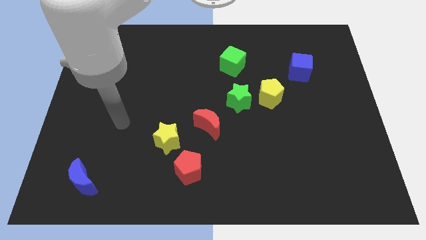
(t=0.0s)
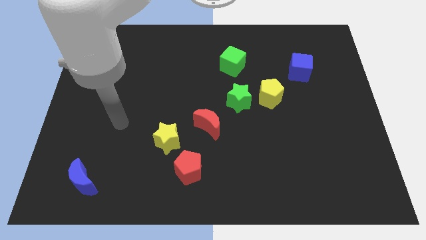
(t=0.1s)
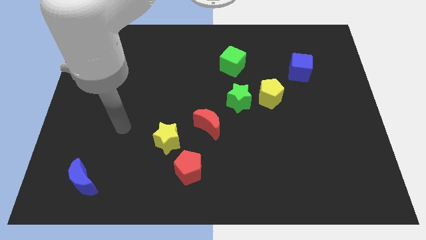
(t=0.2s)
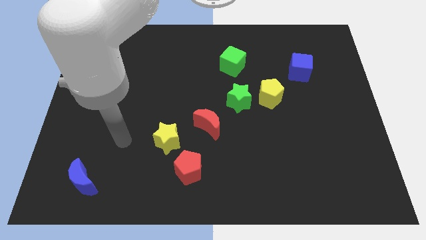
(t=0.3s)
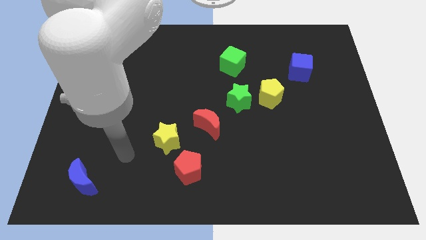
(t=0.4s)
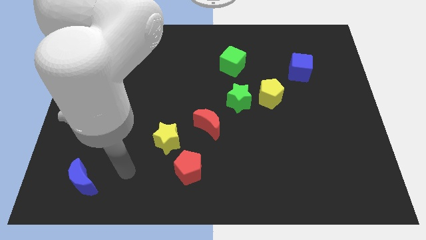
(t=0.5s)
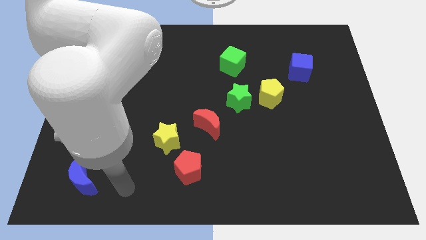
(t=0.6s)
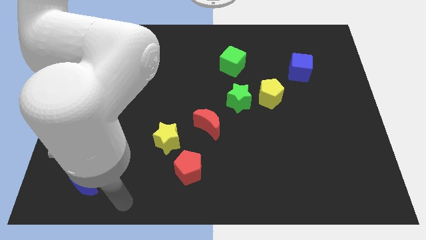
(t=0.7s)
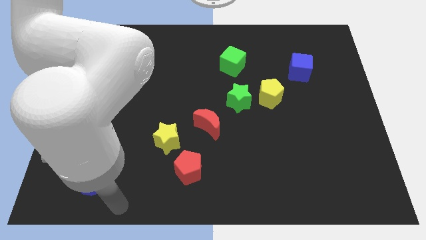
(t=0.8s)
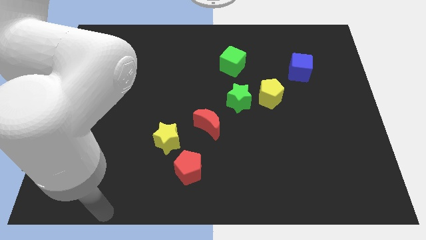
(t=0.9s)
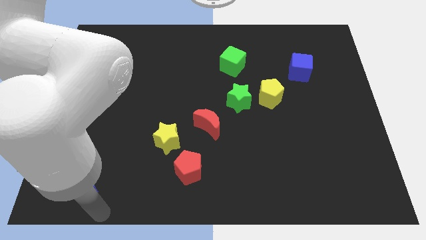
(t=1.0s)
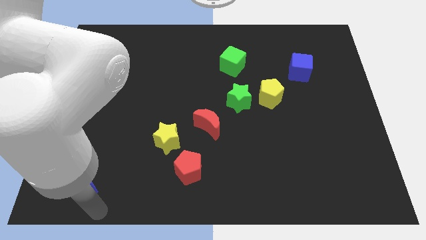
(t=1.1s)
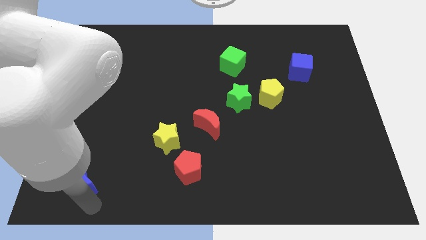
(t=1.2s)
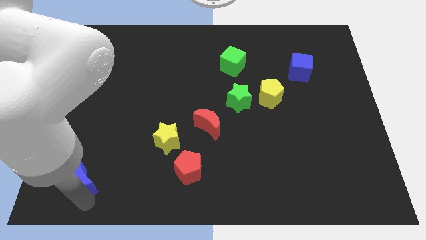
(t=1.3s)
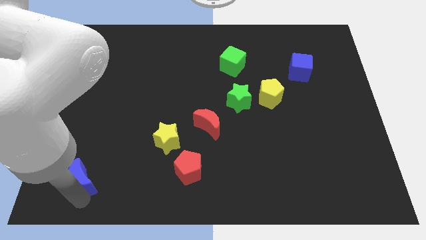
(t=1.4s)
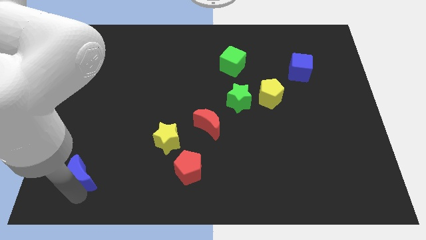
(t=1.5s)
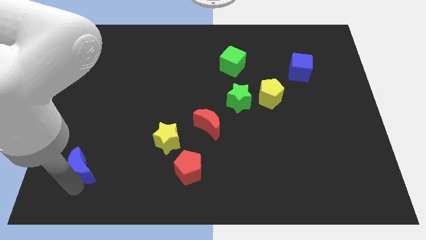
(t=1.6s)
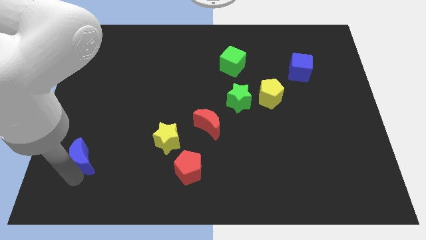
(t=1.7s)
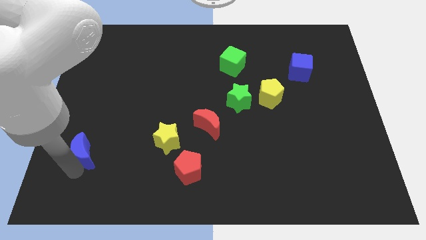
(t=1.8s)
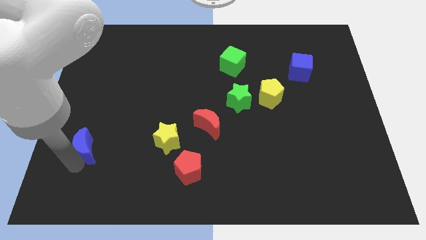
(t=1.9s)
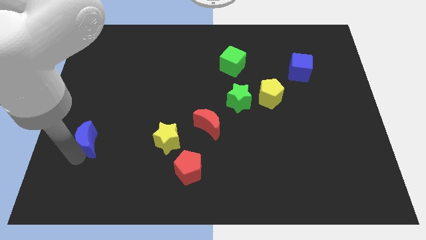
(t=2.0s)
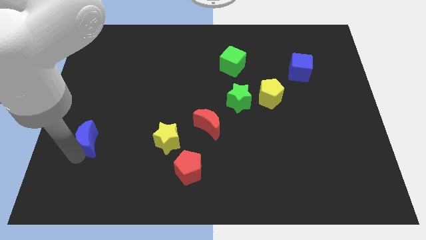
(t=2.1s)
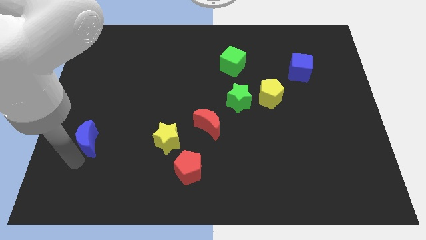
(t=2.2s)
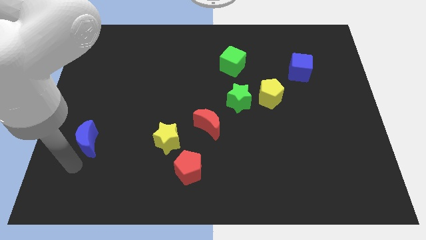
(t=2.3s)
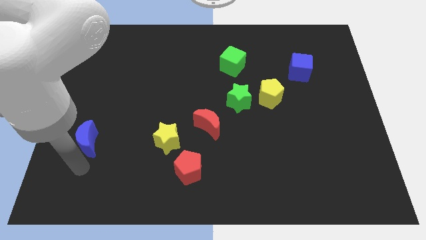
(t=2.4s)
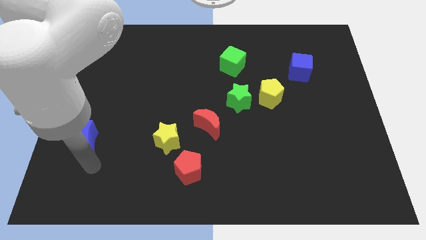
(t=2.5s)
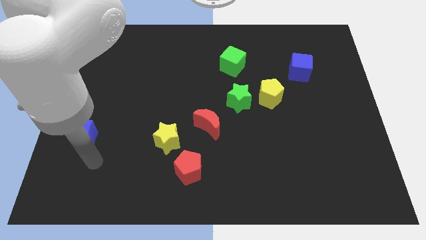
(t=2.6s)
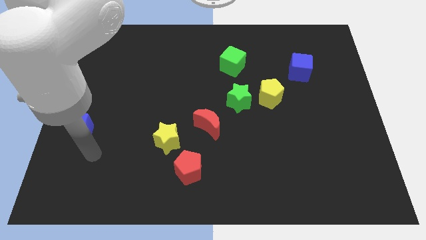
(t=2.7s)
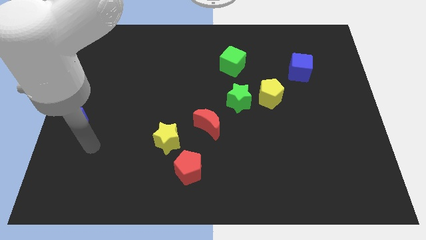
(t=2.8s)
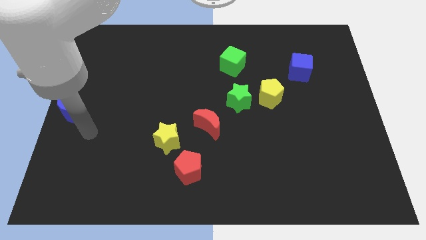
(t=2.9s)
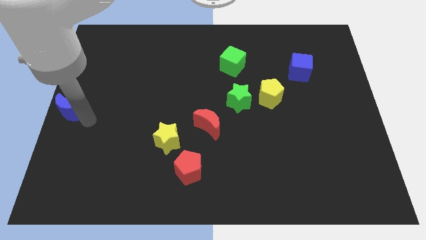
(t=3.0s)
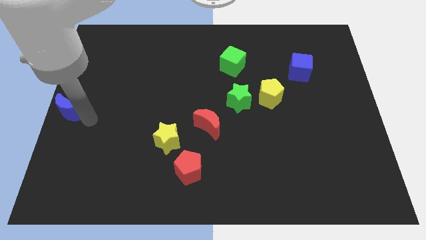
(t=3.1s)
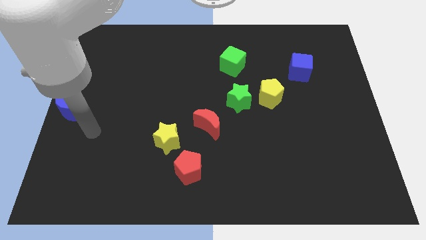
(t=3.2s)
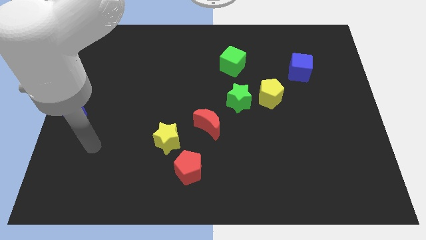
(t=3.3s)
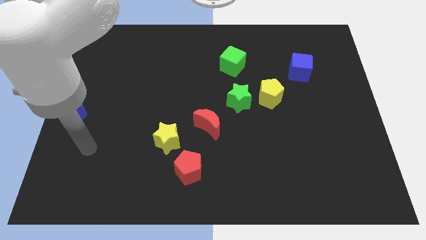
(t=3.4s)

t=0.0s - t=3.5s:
place the blue crescent to the left center of the board

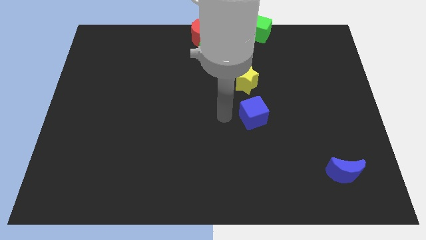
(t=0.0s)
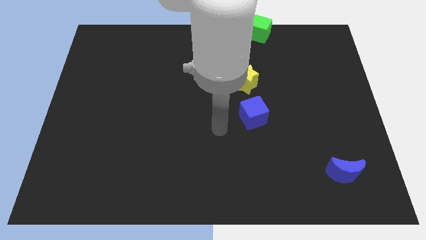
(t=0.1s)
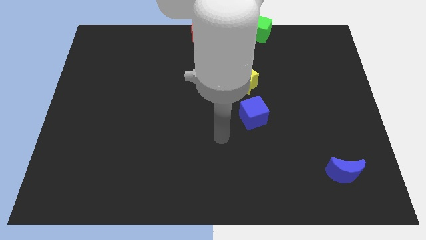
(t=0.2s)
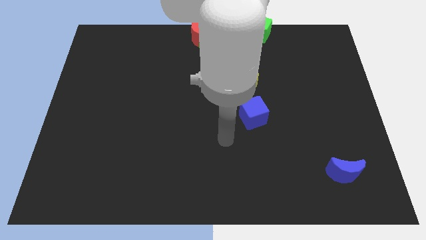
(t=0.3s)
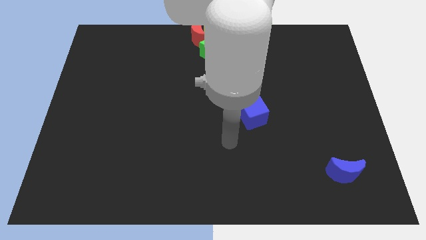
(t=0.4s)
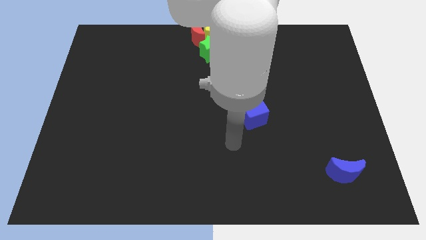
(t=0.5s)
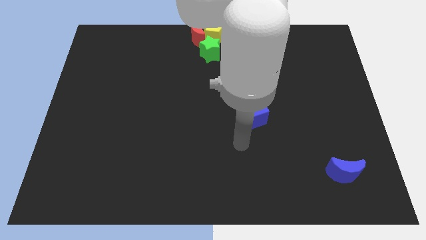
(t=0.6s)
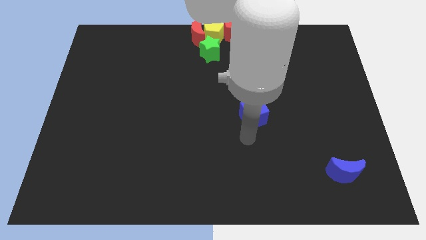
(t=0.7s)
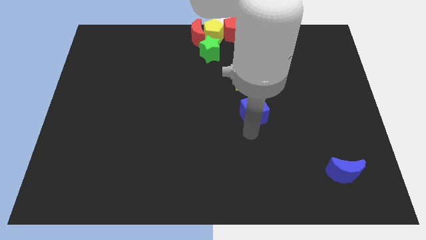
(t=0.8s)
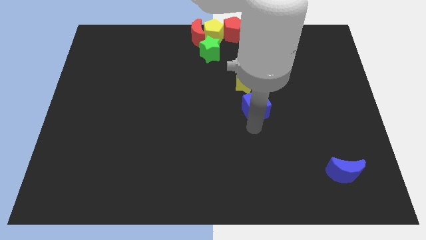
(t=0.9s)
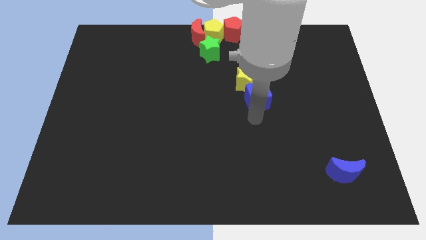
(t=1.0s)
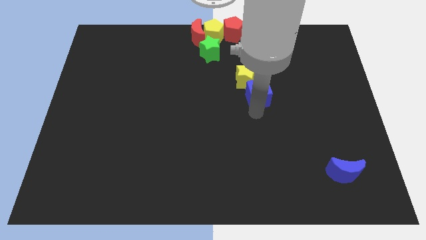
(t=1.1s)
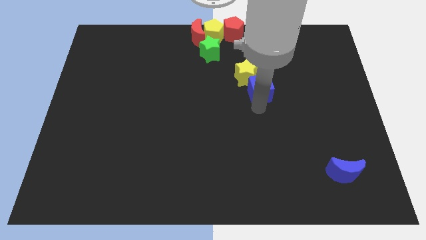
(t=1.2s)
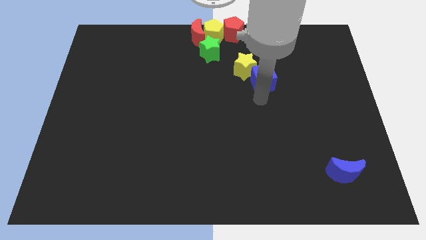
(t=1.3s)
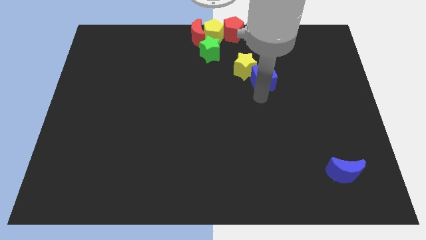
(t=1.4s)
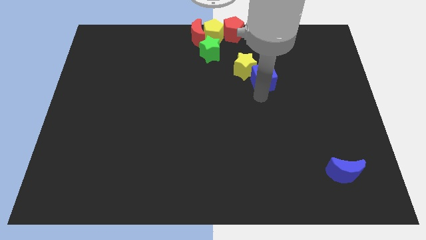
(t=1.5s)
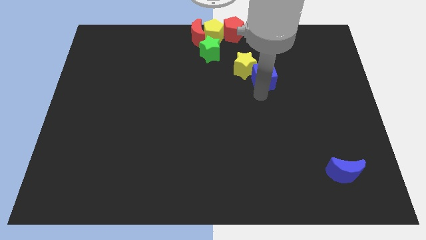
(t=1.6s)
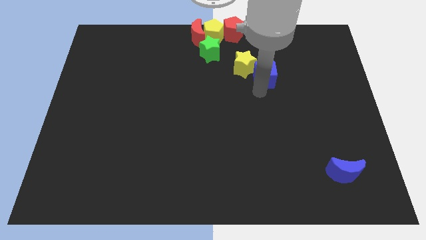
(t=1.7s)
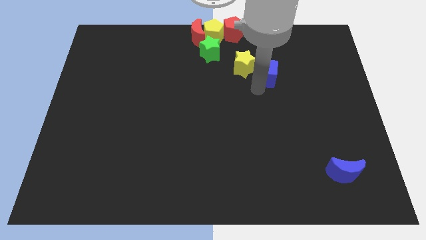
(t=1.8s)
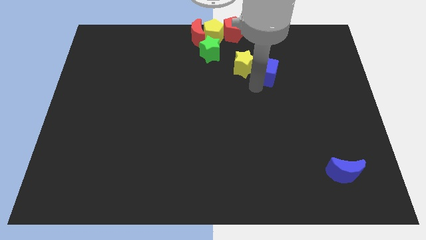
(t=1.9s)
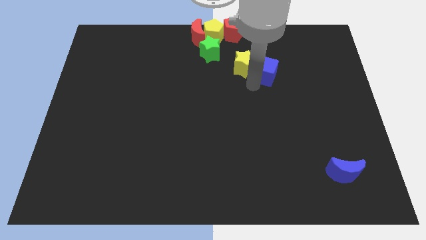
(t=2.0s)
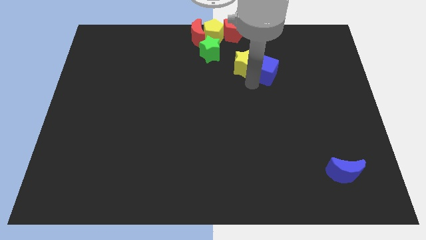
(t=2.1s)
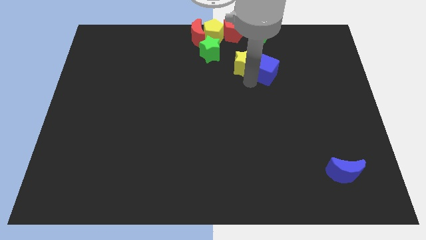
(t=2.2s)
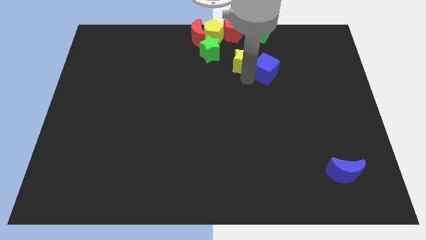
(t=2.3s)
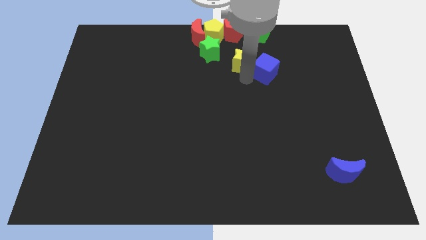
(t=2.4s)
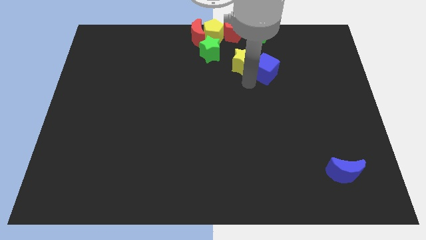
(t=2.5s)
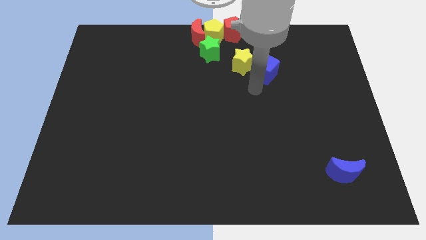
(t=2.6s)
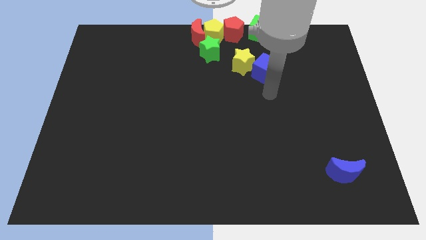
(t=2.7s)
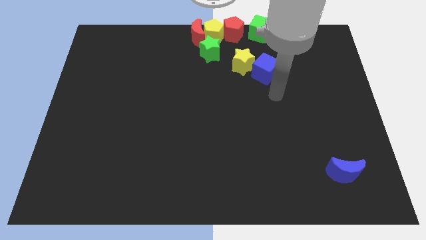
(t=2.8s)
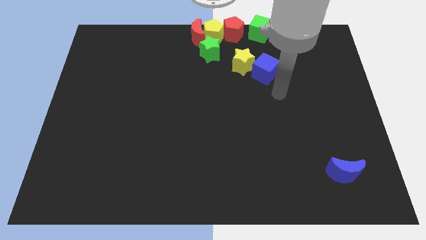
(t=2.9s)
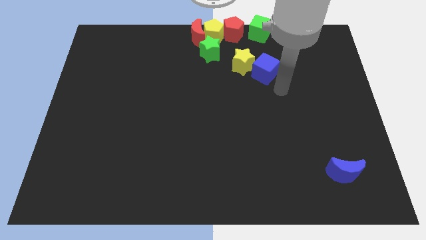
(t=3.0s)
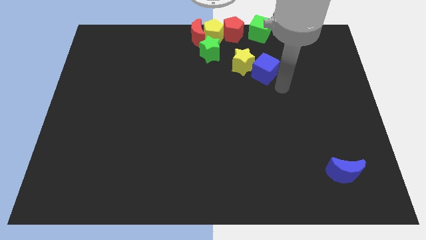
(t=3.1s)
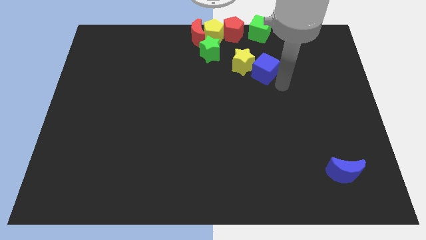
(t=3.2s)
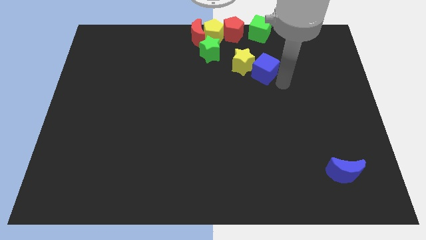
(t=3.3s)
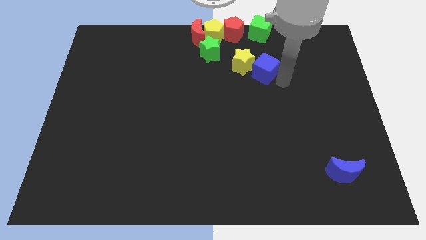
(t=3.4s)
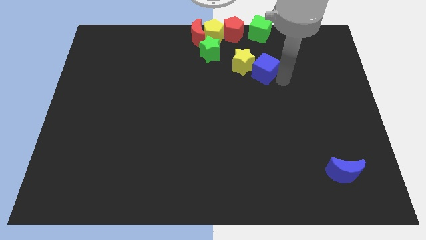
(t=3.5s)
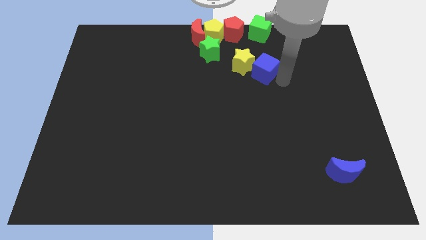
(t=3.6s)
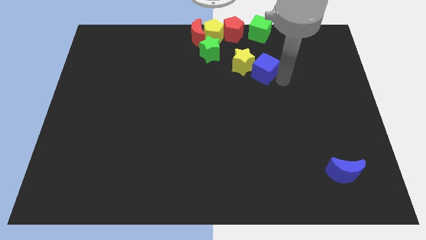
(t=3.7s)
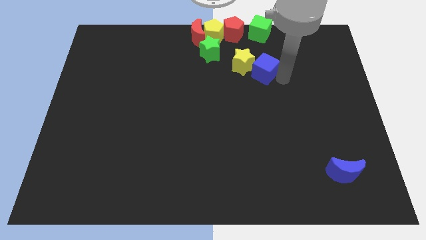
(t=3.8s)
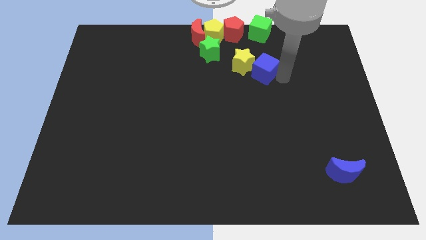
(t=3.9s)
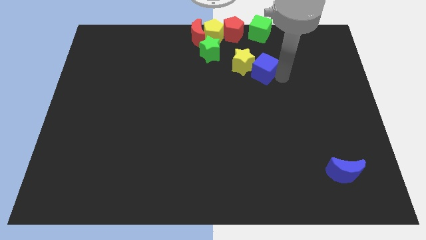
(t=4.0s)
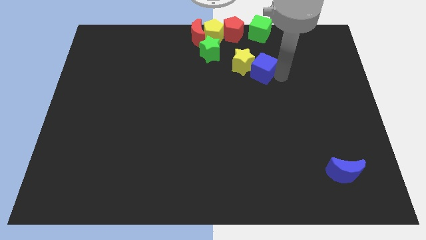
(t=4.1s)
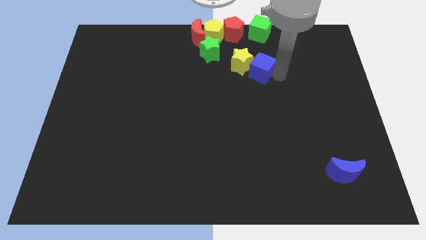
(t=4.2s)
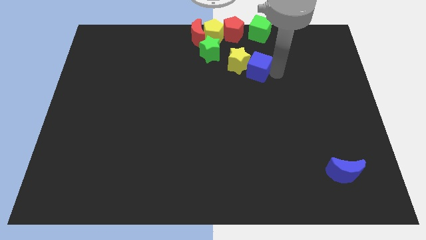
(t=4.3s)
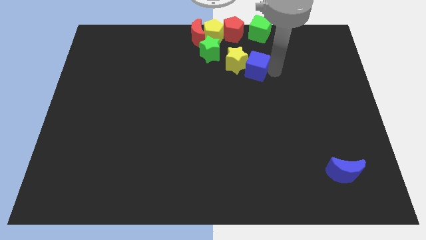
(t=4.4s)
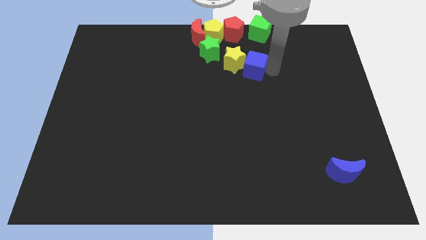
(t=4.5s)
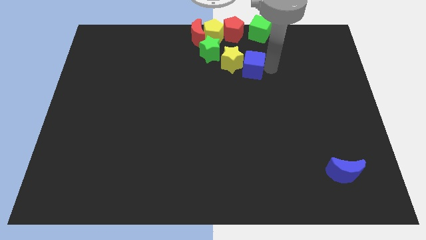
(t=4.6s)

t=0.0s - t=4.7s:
move blue cube and yellow star towards top center

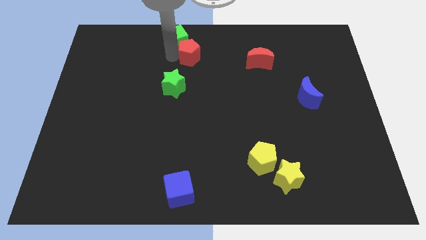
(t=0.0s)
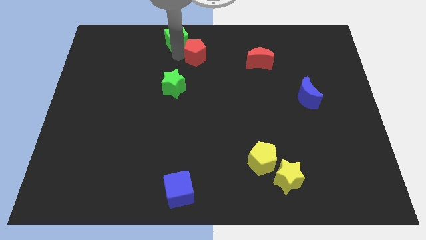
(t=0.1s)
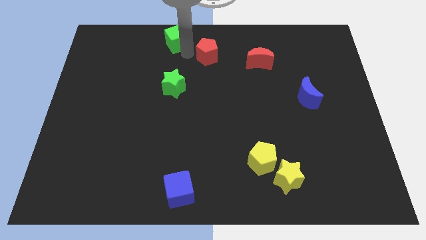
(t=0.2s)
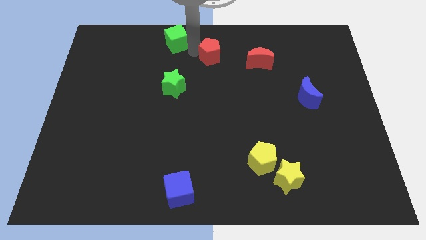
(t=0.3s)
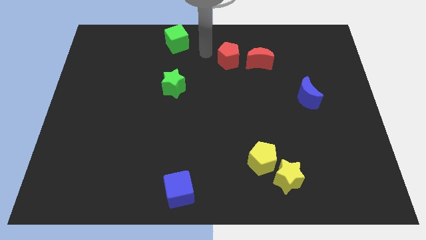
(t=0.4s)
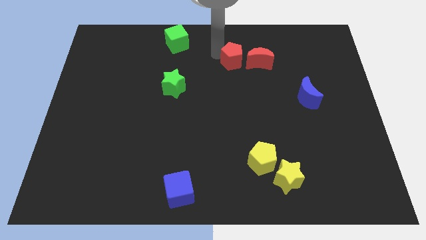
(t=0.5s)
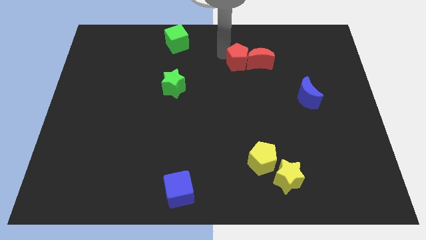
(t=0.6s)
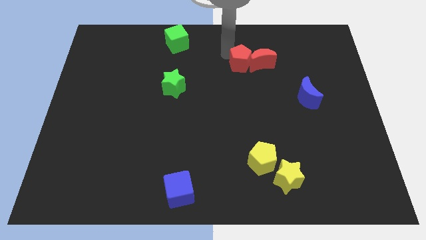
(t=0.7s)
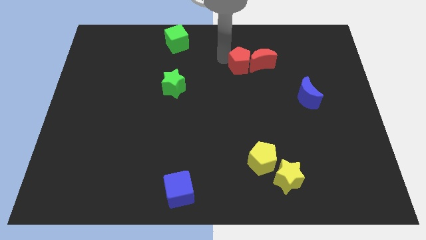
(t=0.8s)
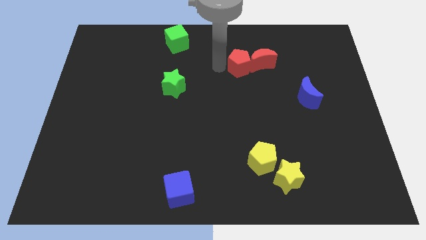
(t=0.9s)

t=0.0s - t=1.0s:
push the red pentagon towards the right of red moon
